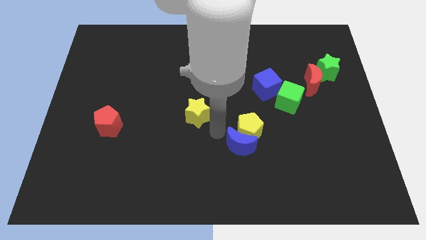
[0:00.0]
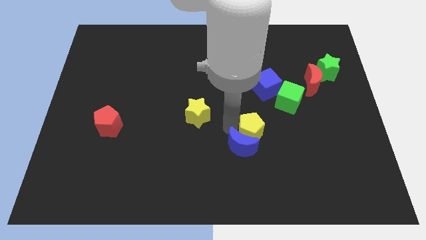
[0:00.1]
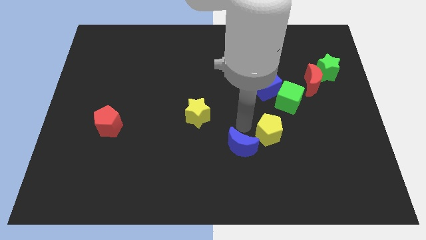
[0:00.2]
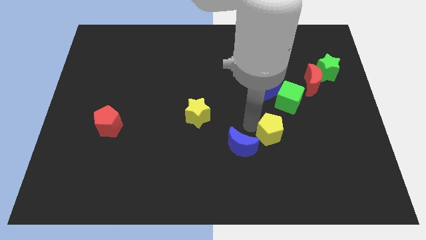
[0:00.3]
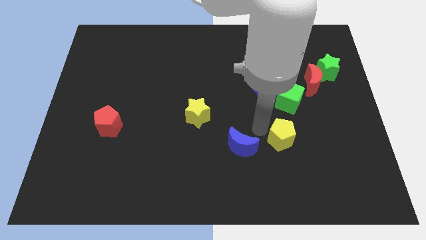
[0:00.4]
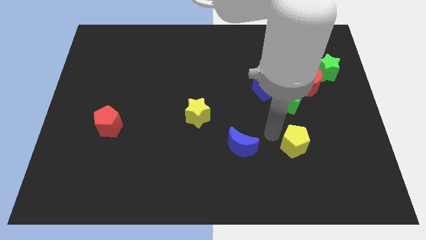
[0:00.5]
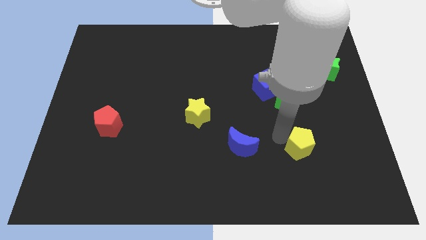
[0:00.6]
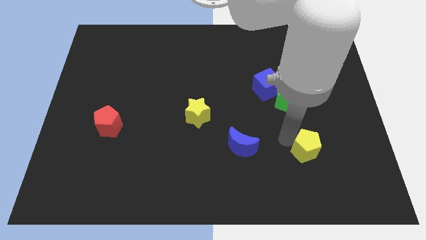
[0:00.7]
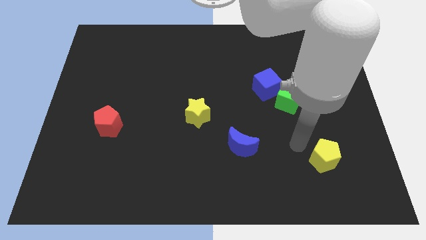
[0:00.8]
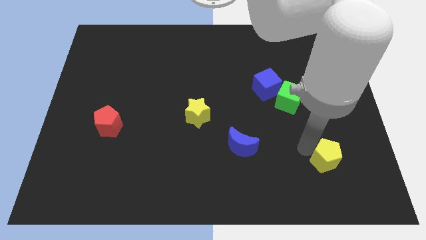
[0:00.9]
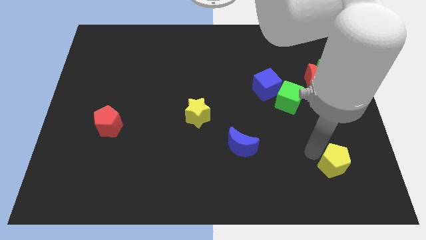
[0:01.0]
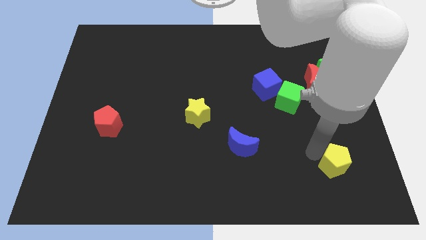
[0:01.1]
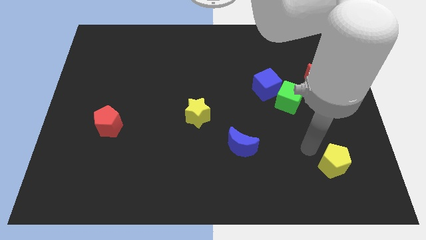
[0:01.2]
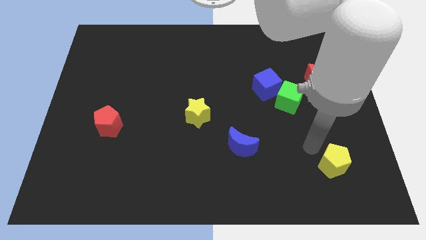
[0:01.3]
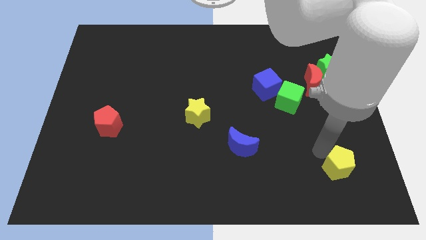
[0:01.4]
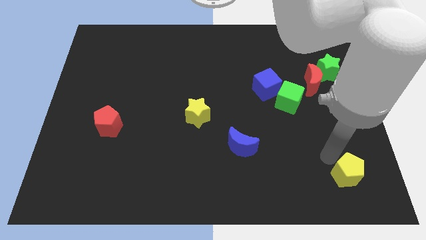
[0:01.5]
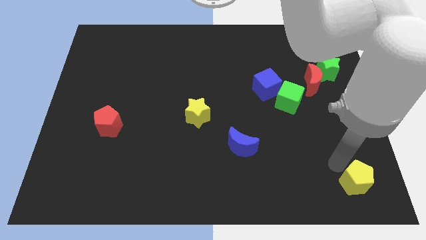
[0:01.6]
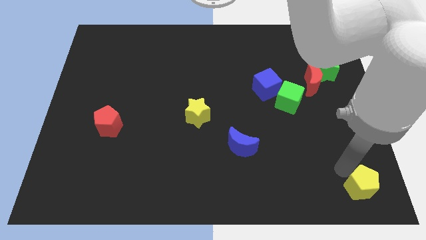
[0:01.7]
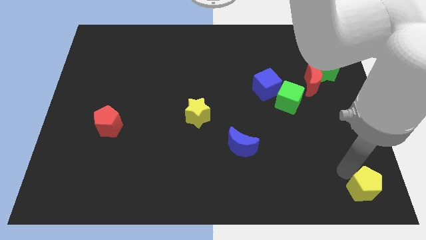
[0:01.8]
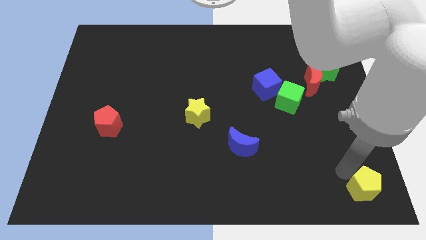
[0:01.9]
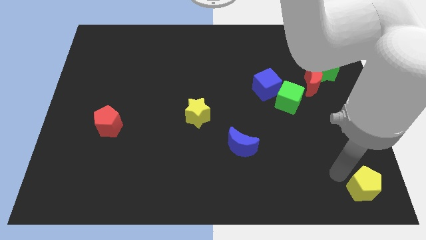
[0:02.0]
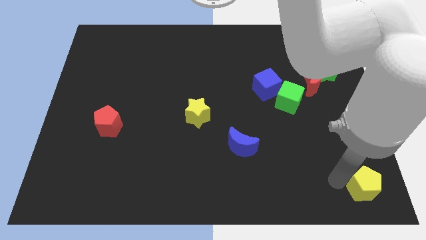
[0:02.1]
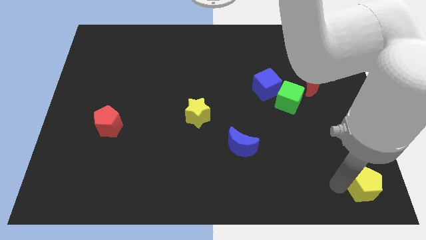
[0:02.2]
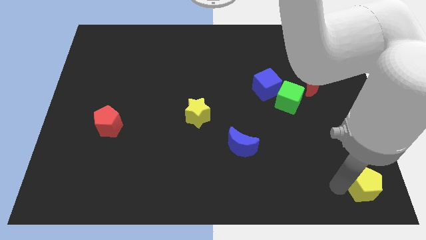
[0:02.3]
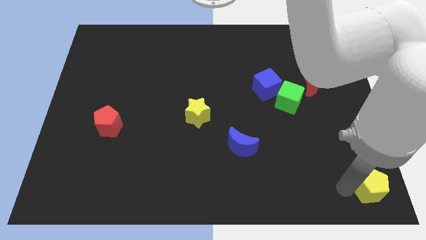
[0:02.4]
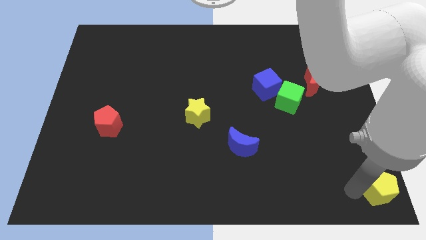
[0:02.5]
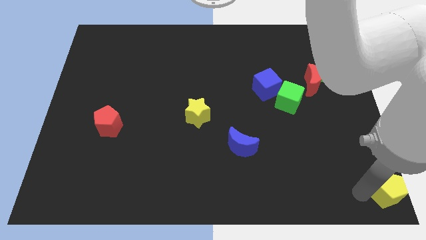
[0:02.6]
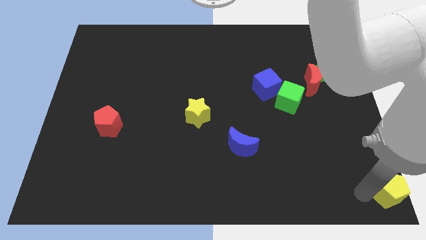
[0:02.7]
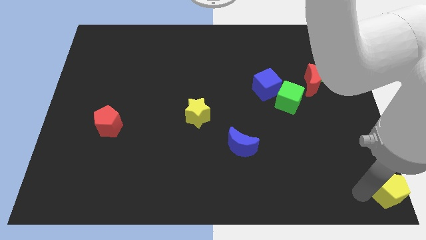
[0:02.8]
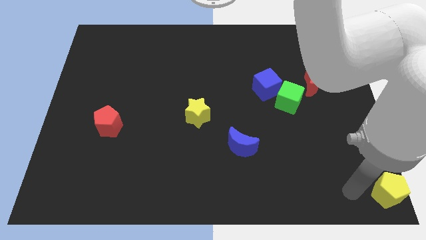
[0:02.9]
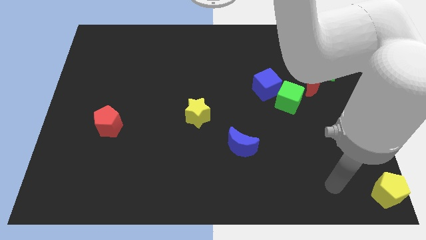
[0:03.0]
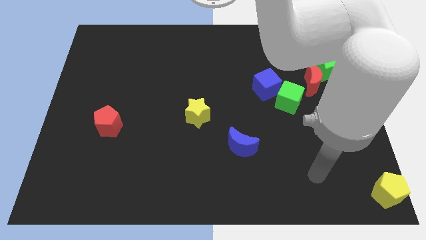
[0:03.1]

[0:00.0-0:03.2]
place the yellow pentagon at the bottom right corner of the board

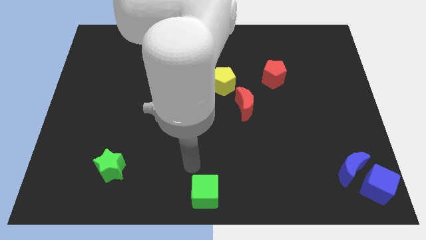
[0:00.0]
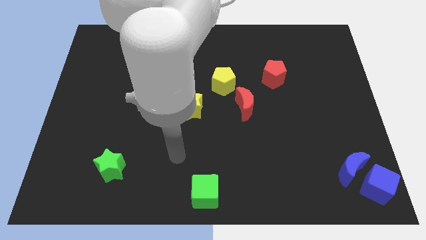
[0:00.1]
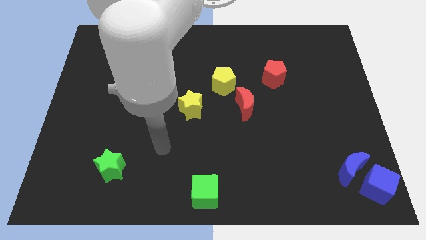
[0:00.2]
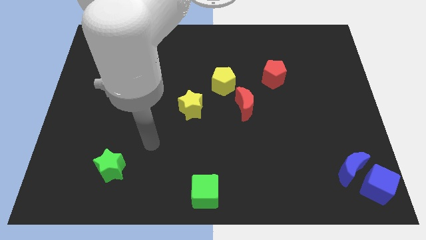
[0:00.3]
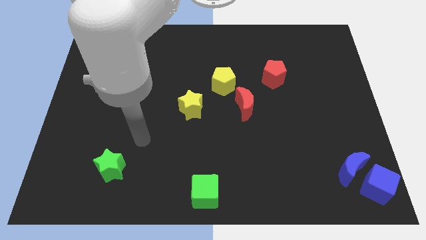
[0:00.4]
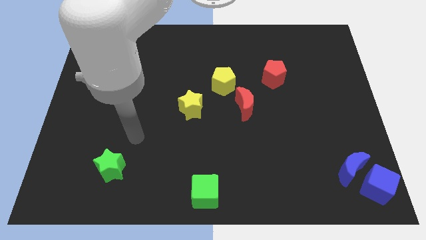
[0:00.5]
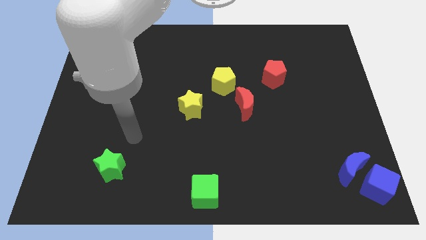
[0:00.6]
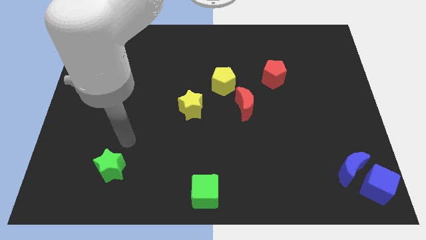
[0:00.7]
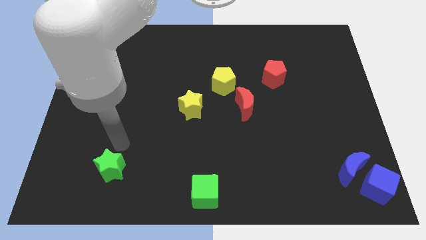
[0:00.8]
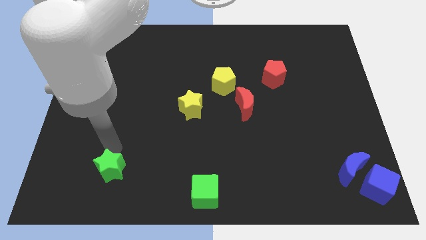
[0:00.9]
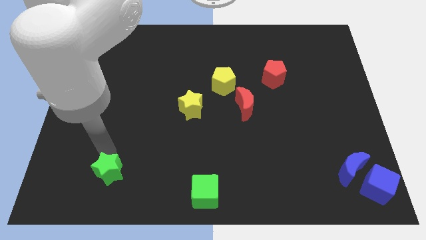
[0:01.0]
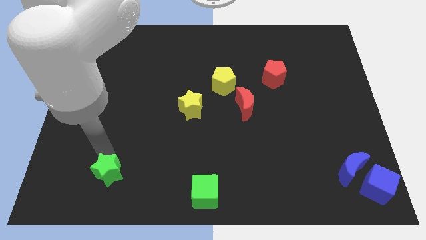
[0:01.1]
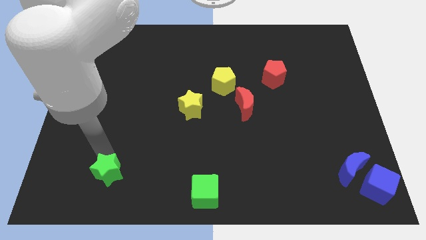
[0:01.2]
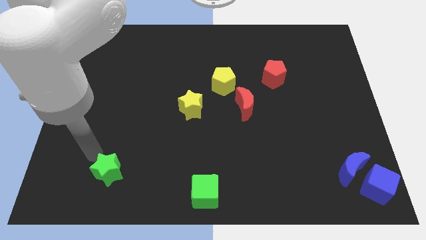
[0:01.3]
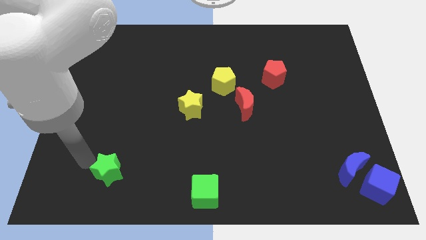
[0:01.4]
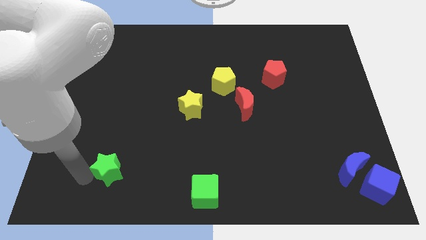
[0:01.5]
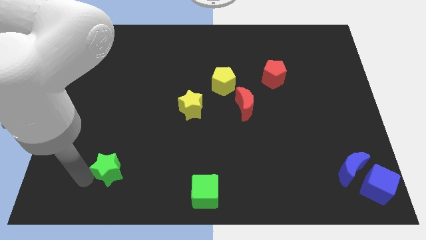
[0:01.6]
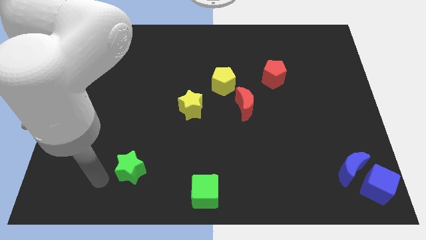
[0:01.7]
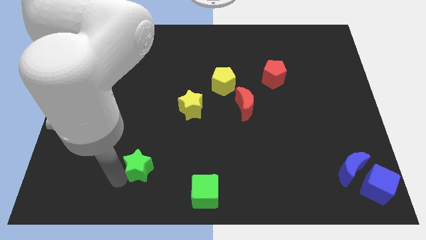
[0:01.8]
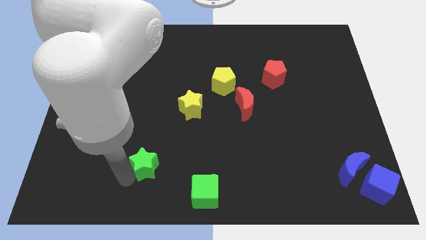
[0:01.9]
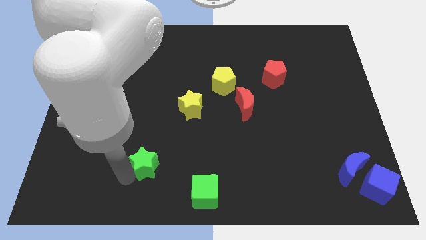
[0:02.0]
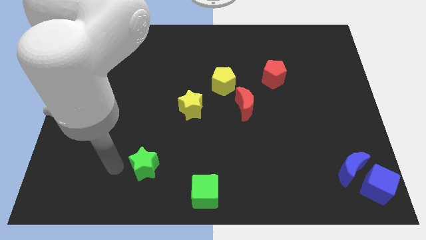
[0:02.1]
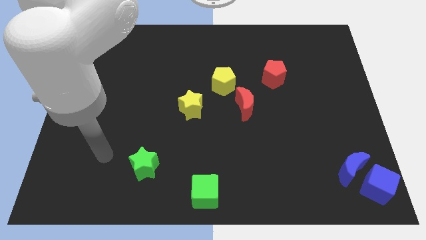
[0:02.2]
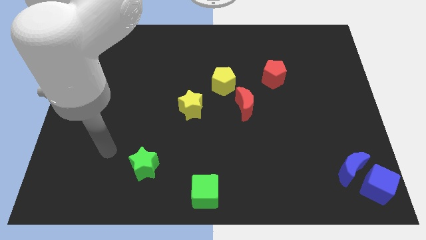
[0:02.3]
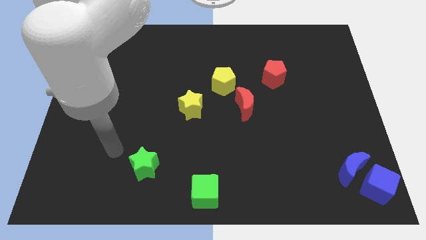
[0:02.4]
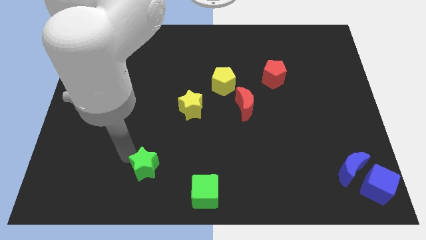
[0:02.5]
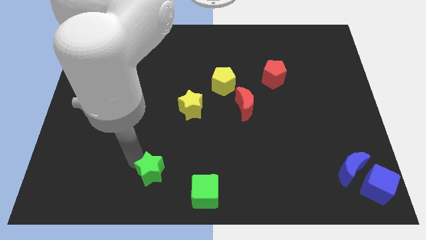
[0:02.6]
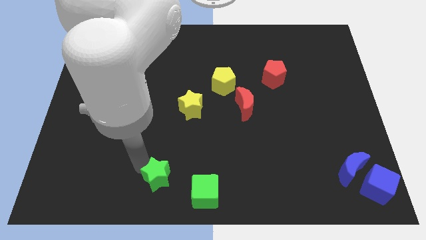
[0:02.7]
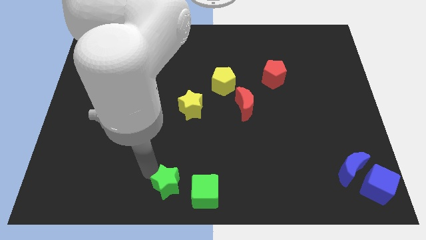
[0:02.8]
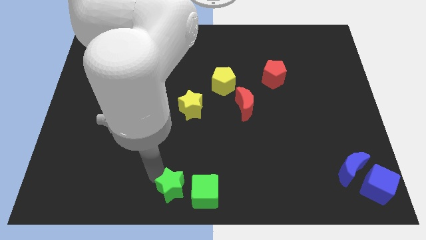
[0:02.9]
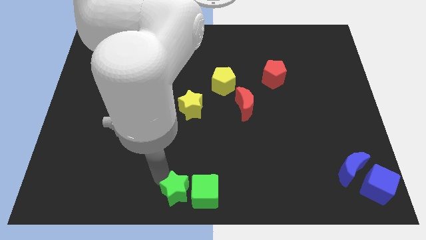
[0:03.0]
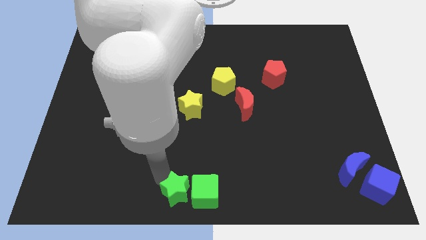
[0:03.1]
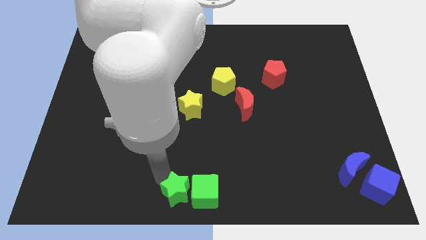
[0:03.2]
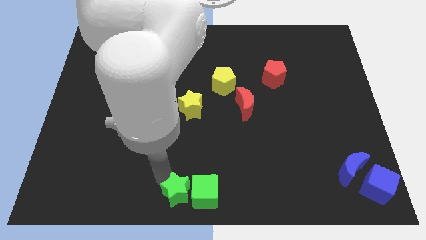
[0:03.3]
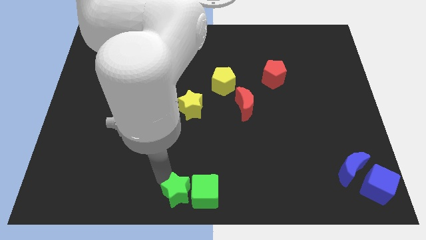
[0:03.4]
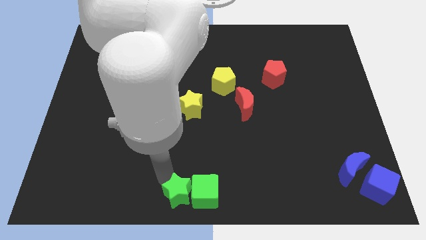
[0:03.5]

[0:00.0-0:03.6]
move the green star to the left of the green cube

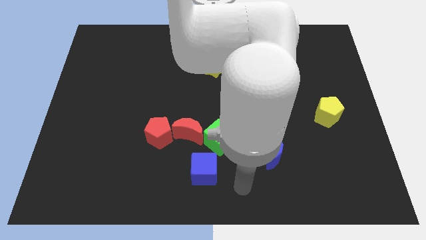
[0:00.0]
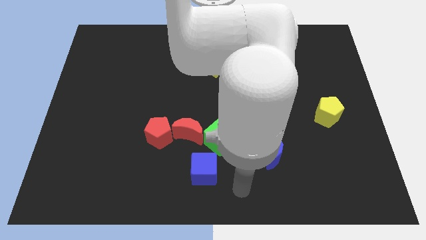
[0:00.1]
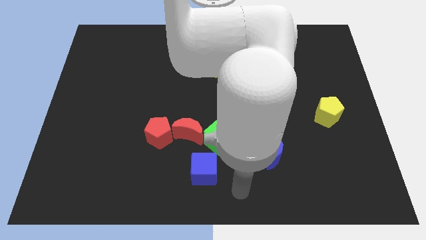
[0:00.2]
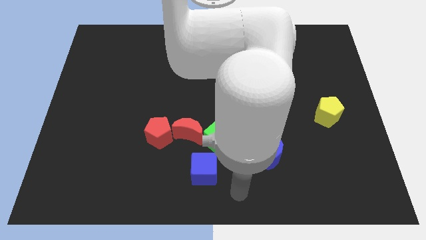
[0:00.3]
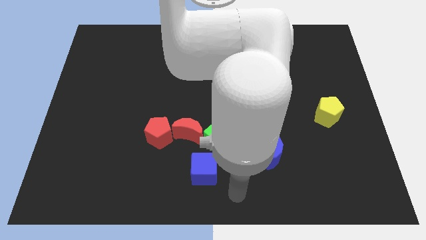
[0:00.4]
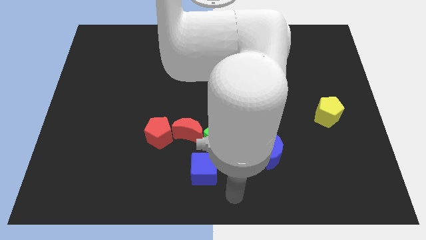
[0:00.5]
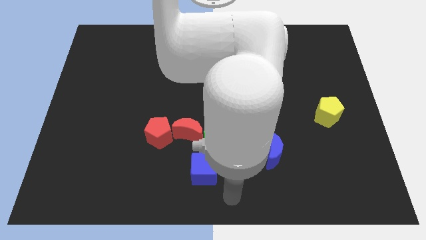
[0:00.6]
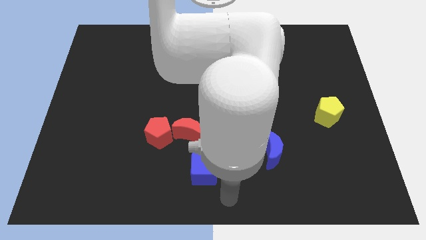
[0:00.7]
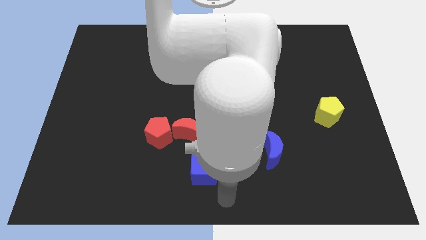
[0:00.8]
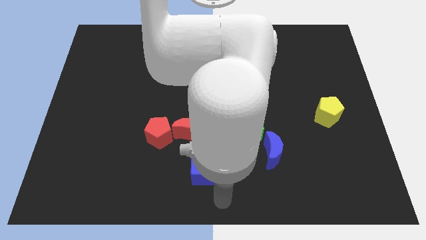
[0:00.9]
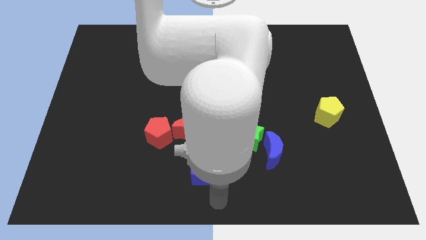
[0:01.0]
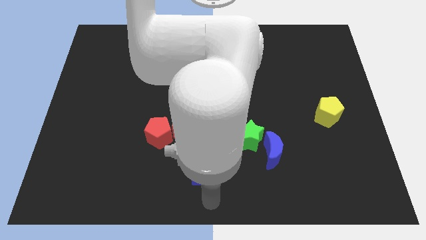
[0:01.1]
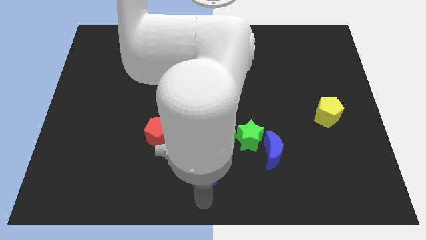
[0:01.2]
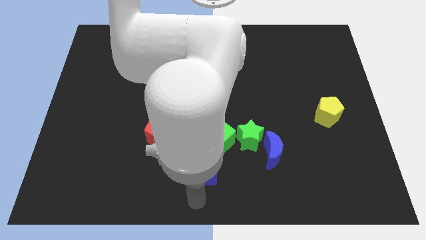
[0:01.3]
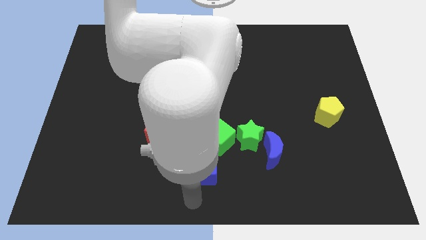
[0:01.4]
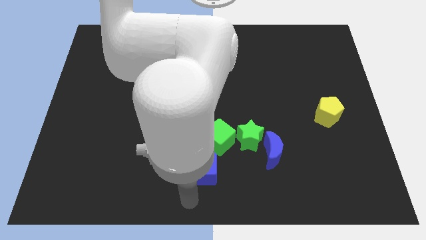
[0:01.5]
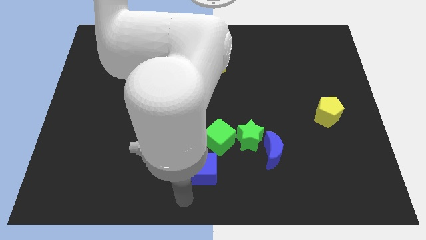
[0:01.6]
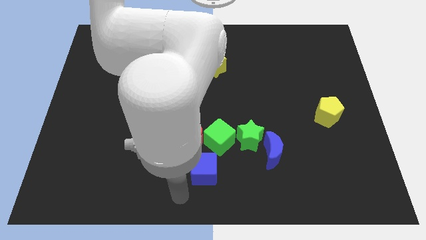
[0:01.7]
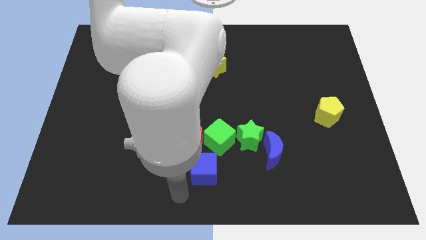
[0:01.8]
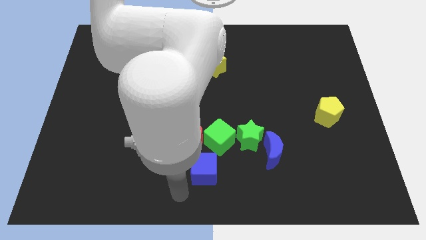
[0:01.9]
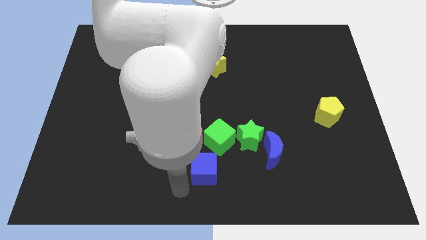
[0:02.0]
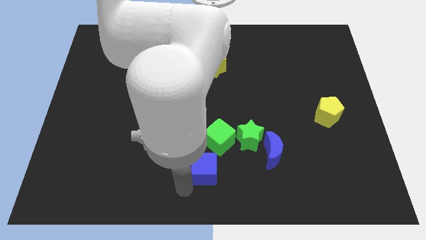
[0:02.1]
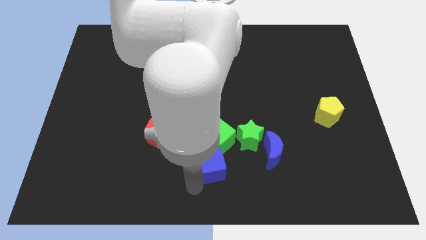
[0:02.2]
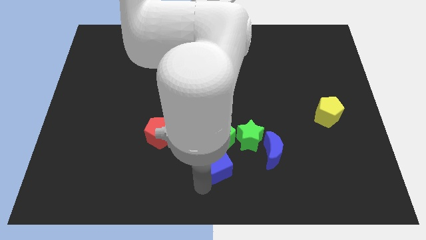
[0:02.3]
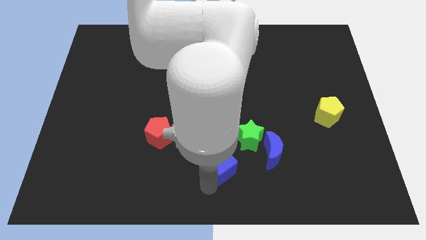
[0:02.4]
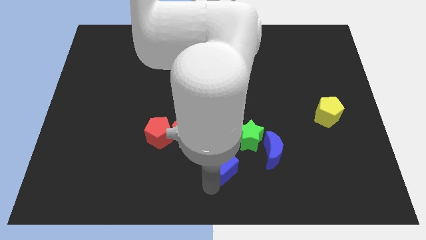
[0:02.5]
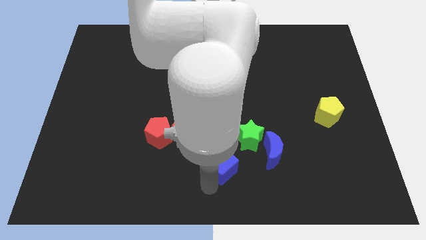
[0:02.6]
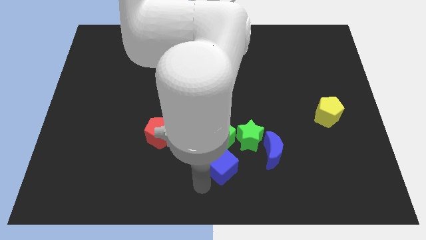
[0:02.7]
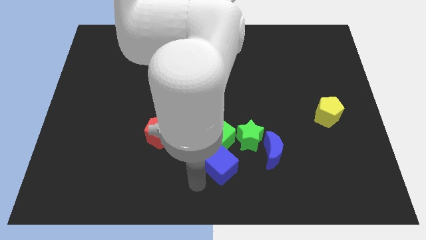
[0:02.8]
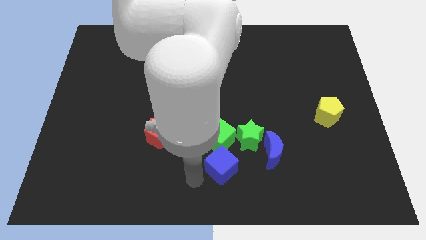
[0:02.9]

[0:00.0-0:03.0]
push the blue cube to the bottom of the green cube
